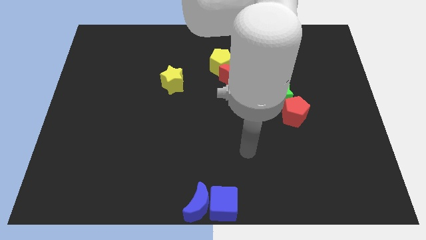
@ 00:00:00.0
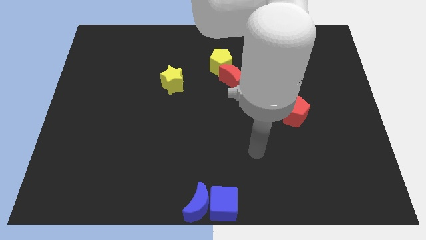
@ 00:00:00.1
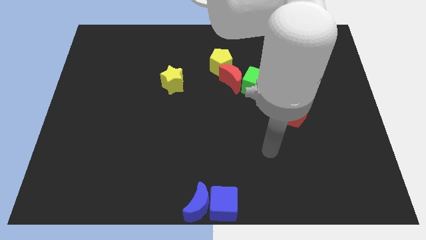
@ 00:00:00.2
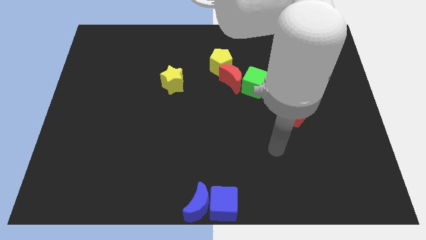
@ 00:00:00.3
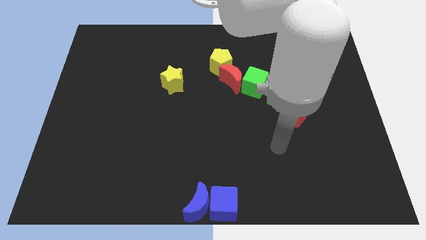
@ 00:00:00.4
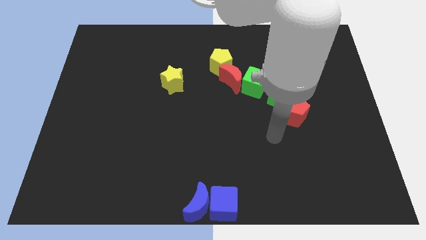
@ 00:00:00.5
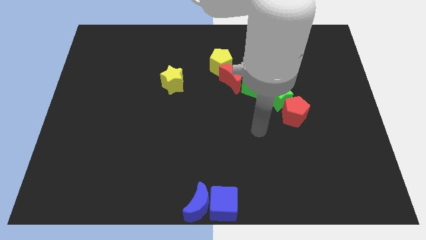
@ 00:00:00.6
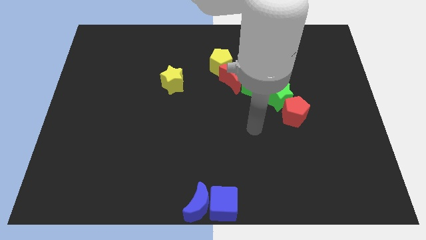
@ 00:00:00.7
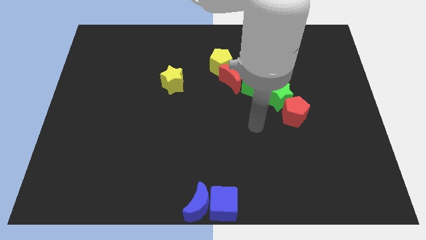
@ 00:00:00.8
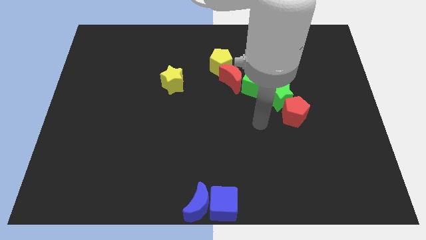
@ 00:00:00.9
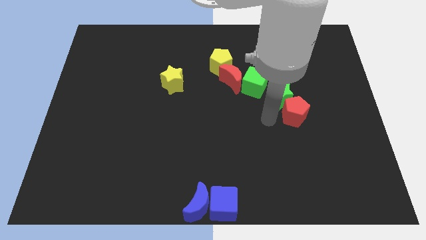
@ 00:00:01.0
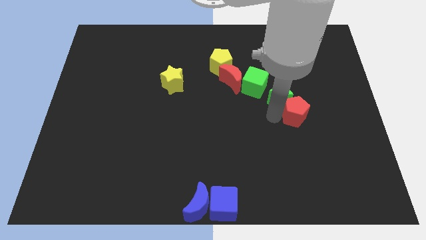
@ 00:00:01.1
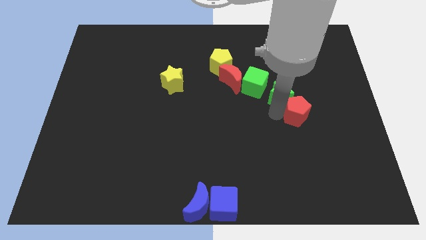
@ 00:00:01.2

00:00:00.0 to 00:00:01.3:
touch the bottom side of the green star

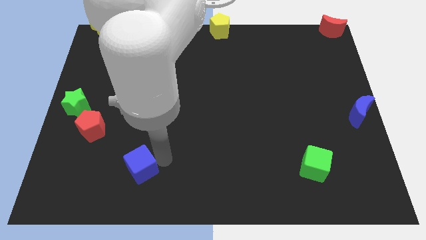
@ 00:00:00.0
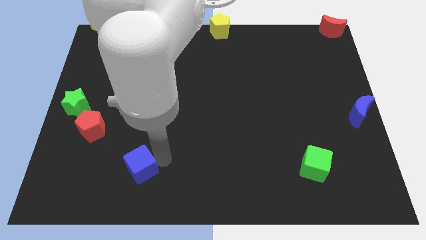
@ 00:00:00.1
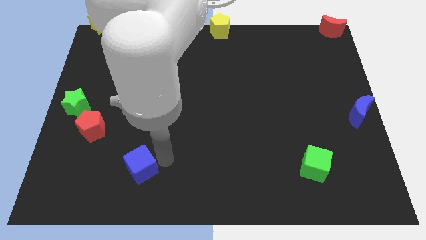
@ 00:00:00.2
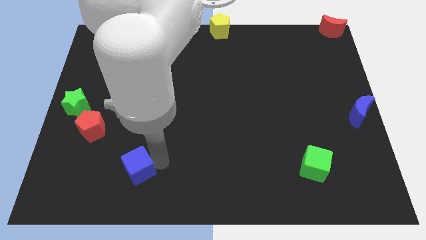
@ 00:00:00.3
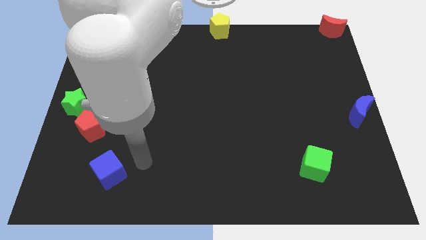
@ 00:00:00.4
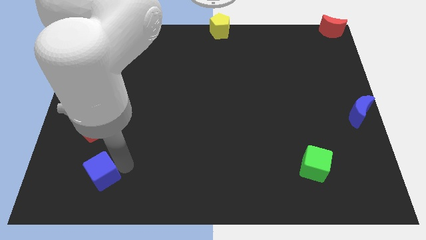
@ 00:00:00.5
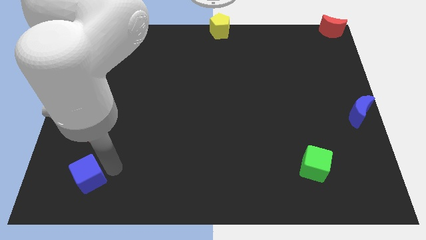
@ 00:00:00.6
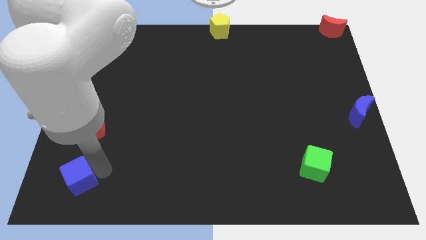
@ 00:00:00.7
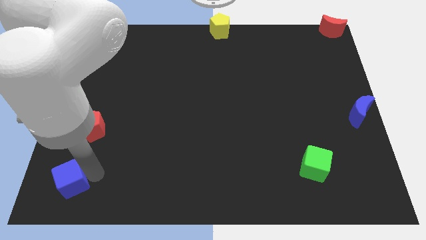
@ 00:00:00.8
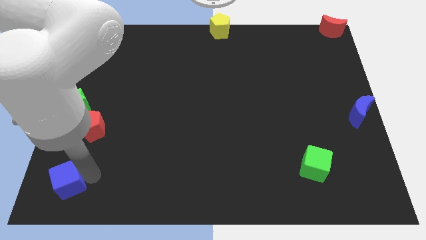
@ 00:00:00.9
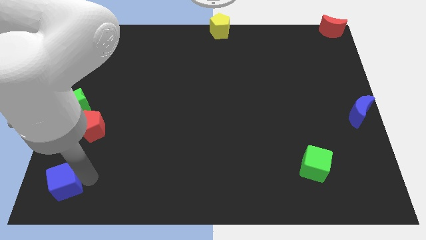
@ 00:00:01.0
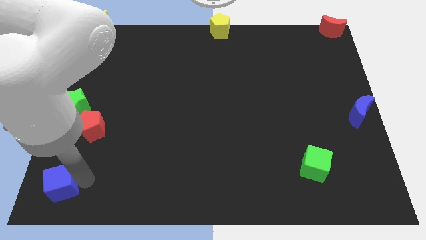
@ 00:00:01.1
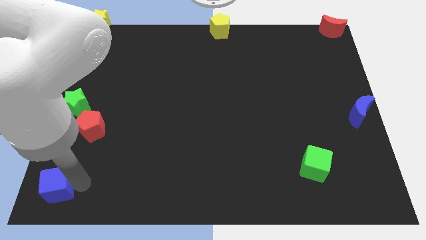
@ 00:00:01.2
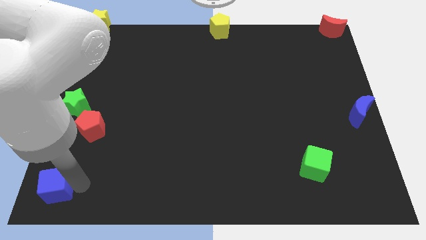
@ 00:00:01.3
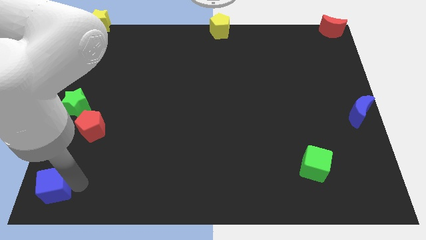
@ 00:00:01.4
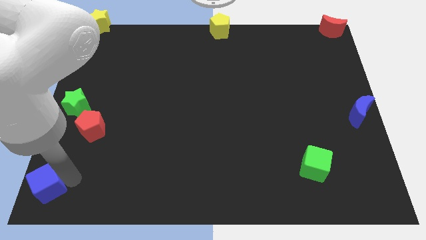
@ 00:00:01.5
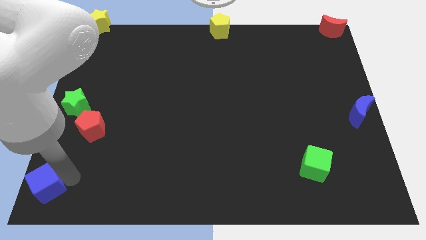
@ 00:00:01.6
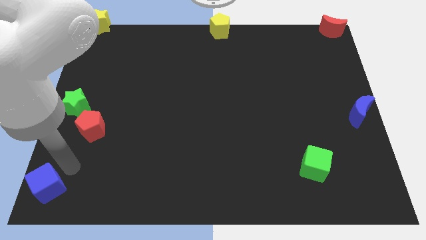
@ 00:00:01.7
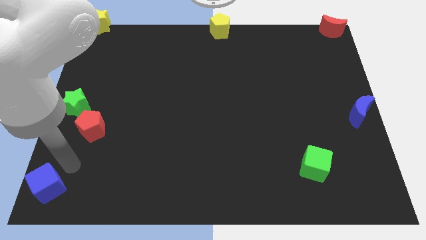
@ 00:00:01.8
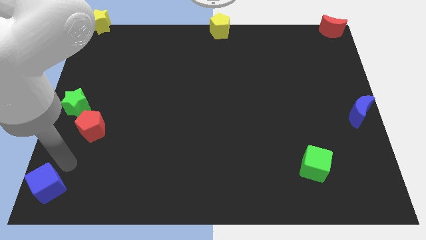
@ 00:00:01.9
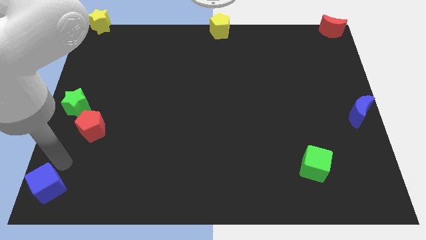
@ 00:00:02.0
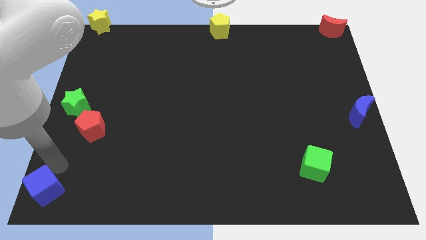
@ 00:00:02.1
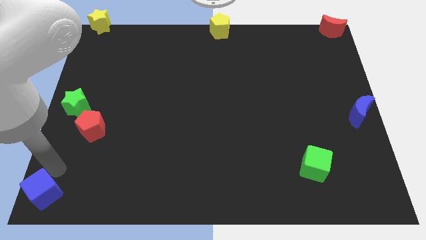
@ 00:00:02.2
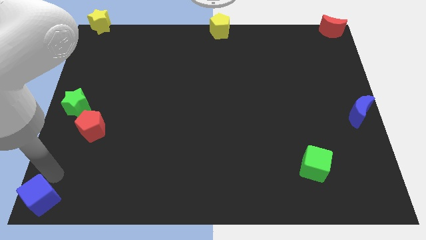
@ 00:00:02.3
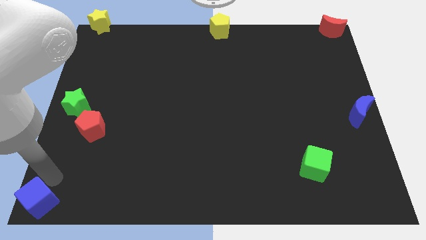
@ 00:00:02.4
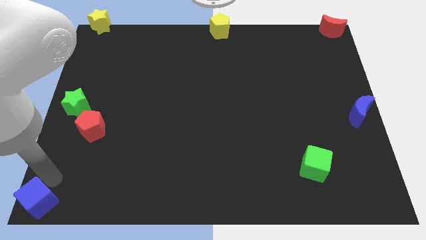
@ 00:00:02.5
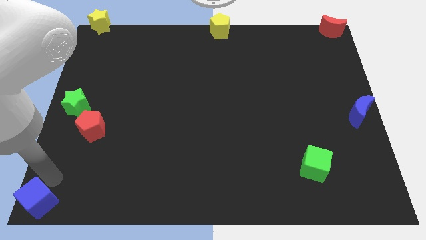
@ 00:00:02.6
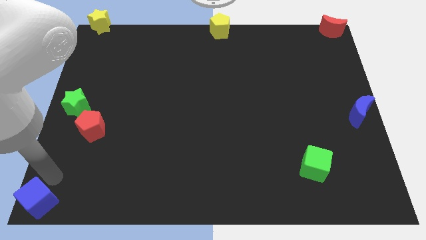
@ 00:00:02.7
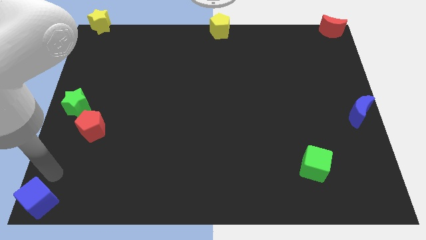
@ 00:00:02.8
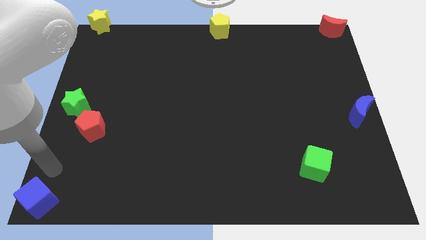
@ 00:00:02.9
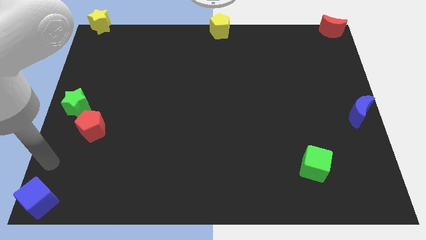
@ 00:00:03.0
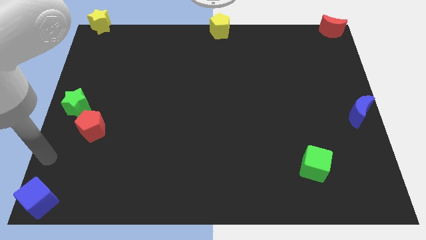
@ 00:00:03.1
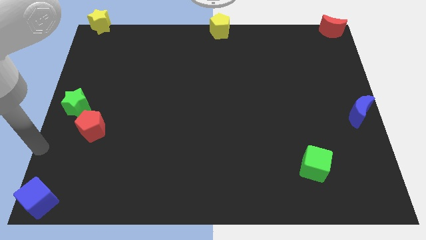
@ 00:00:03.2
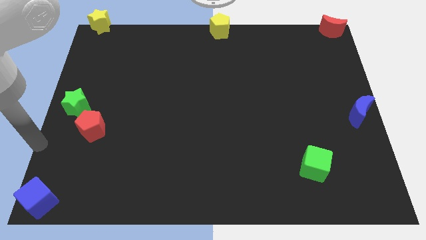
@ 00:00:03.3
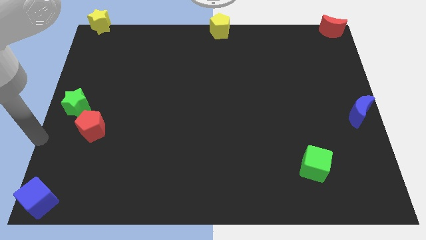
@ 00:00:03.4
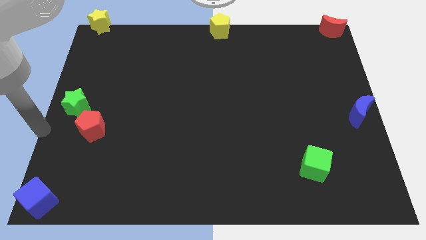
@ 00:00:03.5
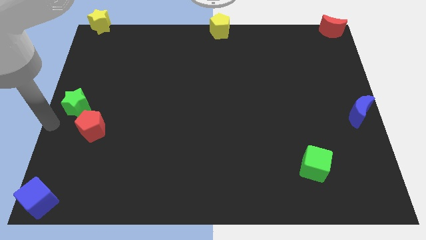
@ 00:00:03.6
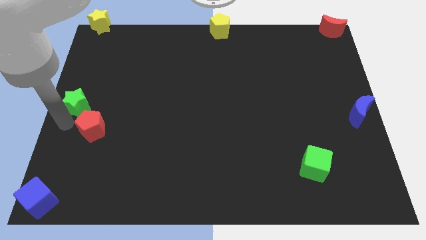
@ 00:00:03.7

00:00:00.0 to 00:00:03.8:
place a blue cube to the bottom left corner of the board

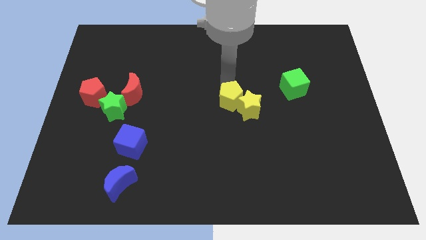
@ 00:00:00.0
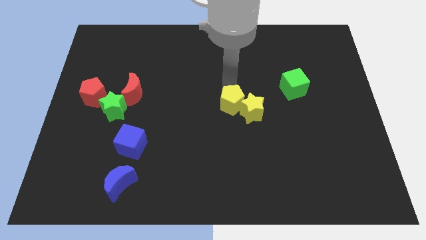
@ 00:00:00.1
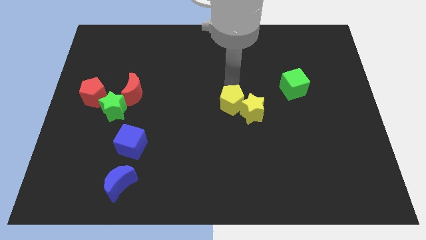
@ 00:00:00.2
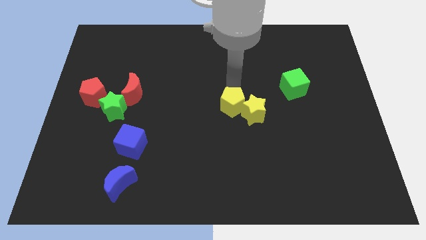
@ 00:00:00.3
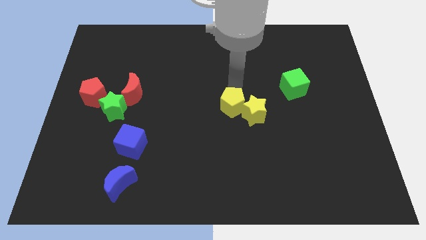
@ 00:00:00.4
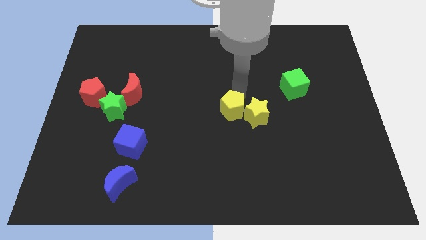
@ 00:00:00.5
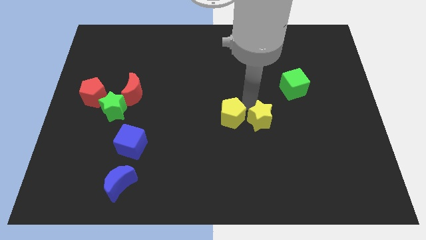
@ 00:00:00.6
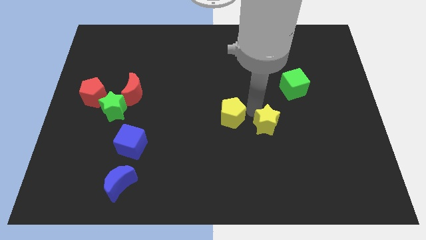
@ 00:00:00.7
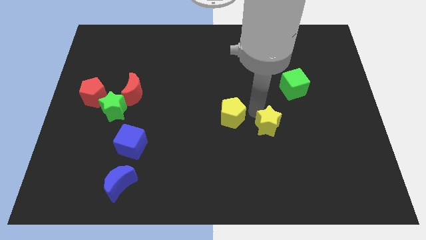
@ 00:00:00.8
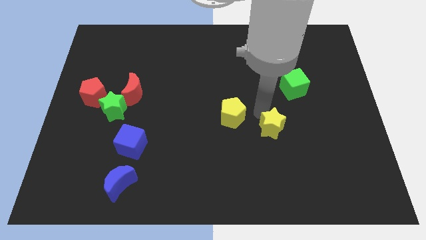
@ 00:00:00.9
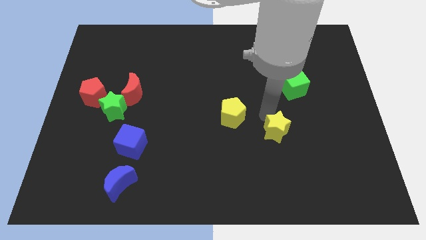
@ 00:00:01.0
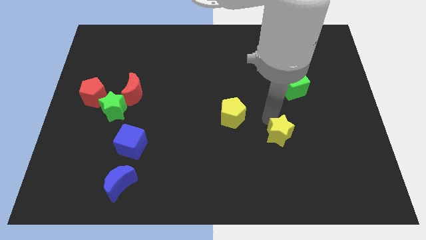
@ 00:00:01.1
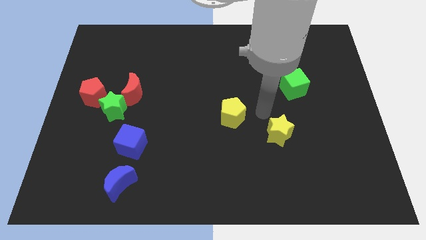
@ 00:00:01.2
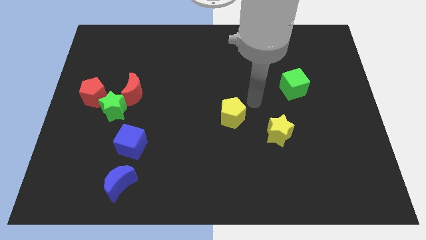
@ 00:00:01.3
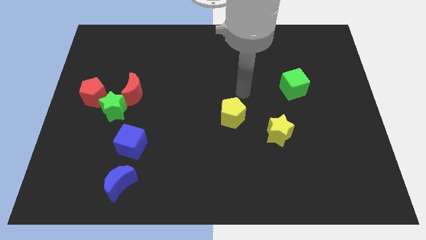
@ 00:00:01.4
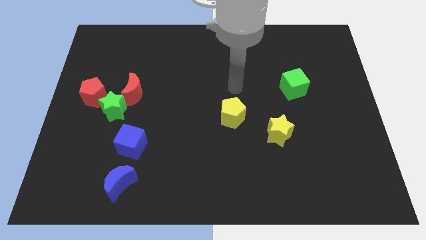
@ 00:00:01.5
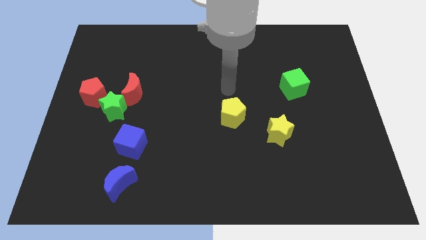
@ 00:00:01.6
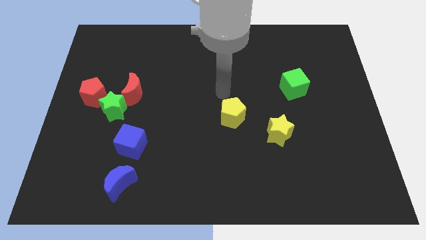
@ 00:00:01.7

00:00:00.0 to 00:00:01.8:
separate the yellow star from the yellow pentagon

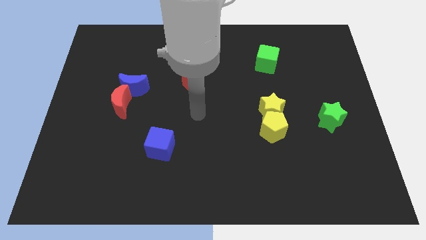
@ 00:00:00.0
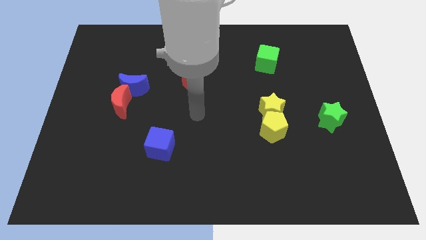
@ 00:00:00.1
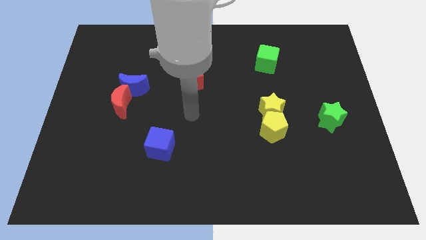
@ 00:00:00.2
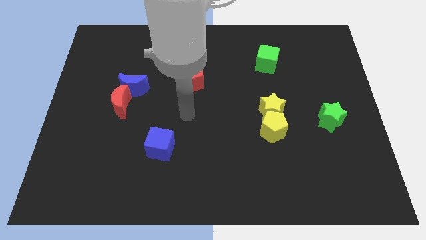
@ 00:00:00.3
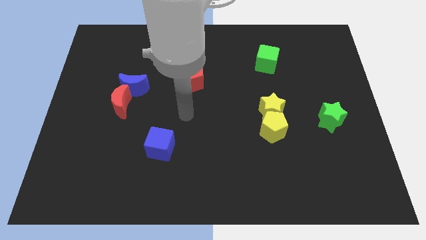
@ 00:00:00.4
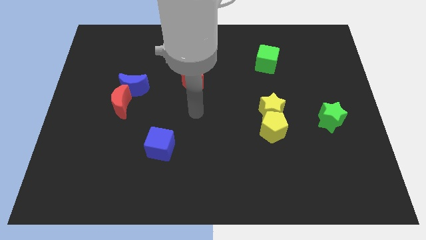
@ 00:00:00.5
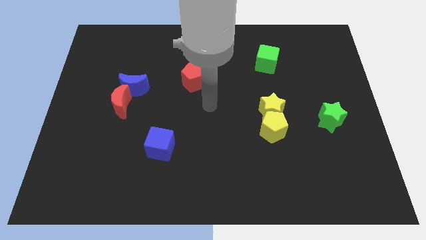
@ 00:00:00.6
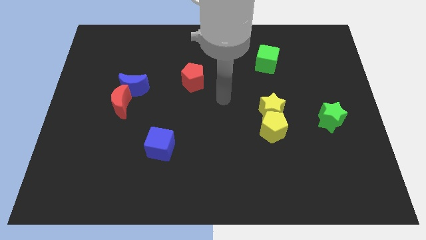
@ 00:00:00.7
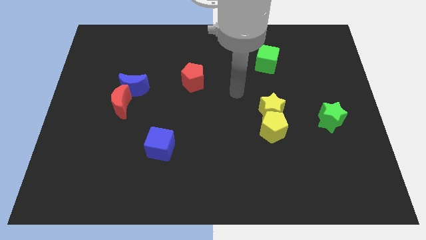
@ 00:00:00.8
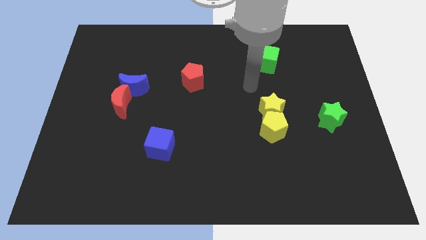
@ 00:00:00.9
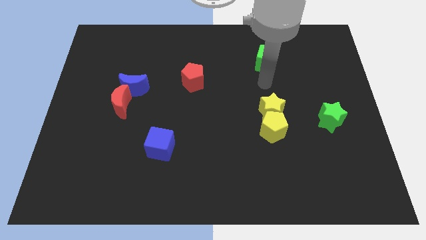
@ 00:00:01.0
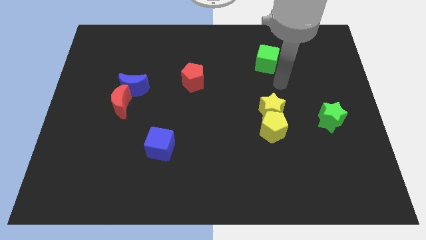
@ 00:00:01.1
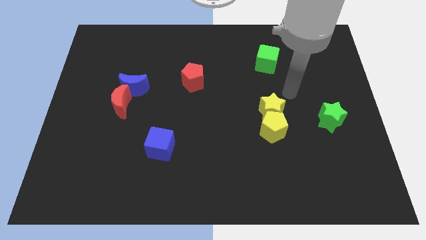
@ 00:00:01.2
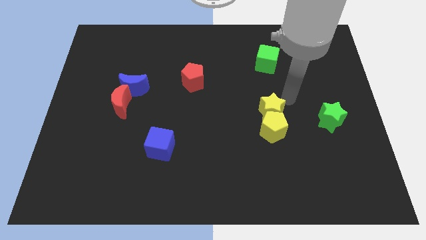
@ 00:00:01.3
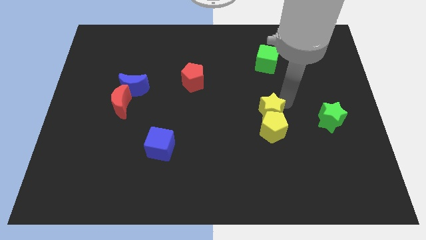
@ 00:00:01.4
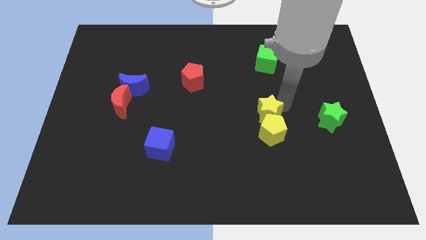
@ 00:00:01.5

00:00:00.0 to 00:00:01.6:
place the arm right to the yellow star

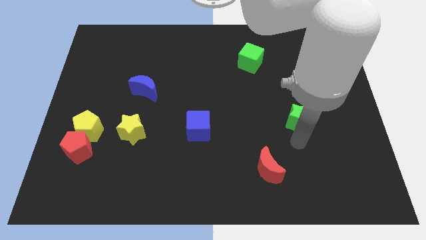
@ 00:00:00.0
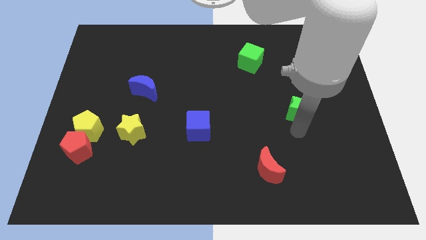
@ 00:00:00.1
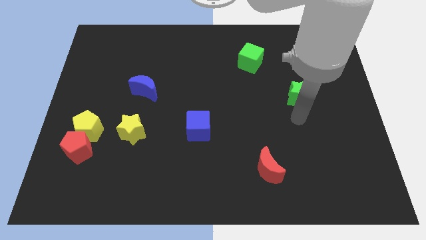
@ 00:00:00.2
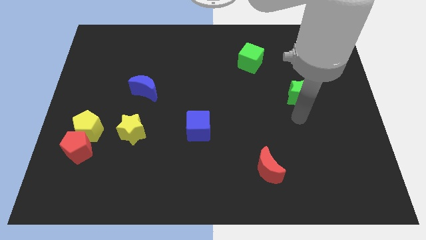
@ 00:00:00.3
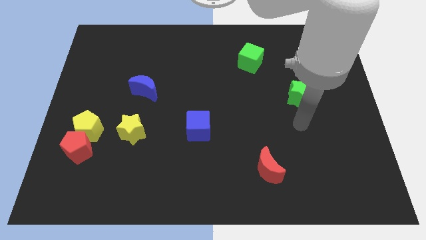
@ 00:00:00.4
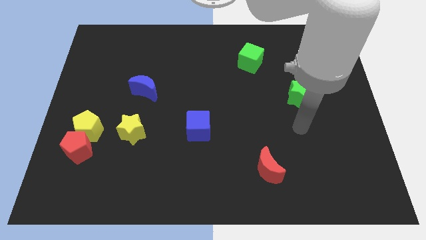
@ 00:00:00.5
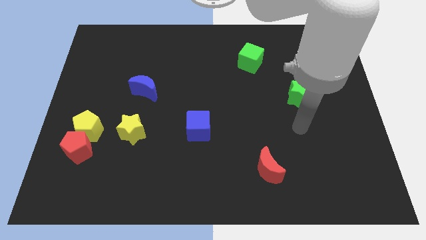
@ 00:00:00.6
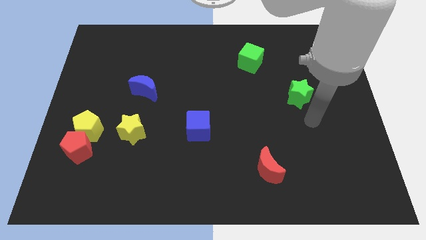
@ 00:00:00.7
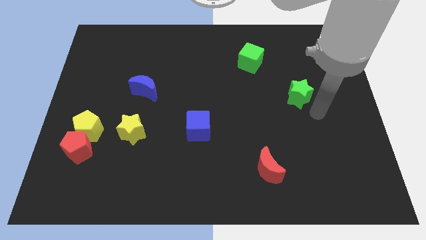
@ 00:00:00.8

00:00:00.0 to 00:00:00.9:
push the green star slightly to the upwards
